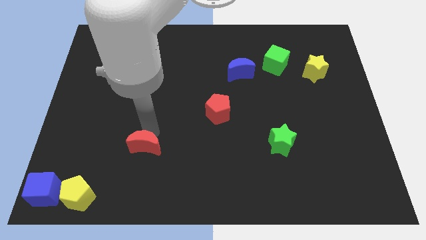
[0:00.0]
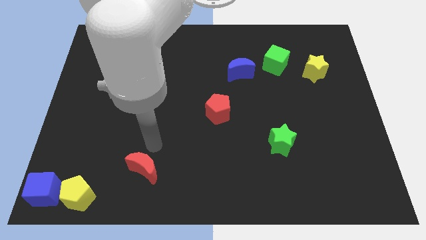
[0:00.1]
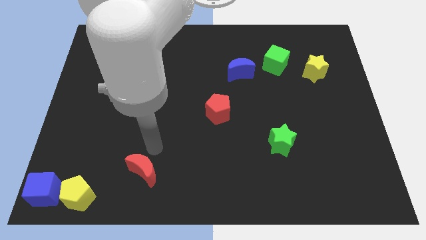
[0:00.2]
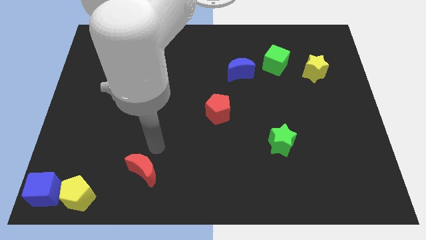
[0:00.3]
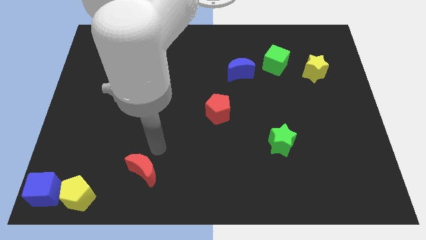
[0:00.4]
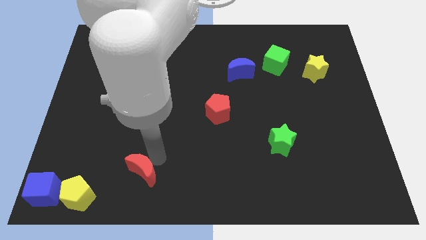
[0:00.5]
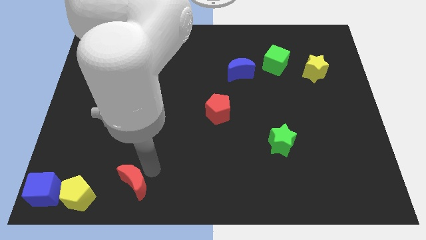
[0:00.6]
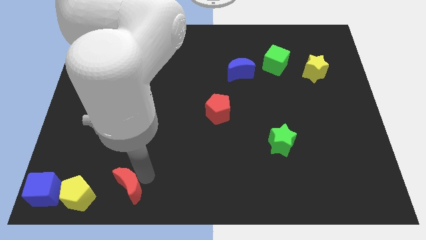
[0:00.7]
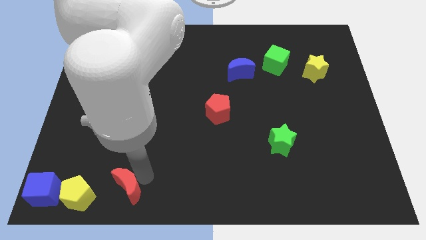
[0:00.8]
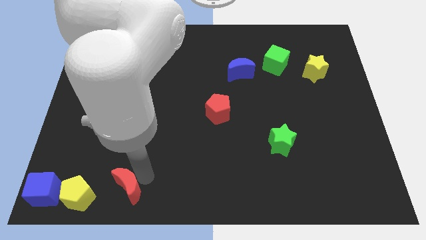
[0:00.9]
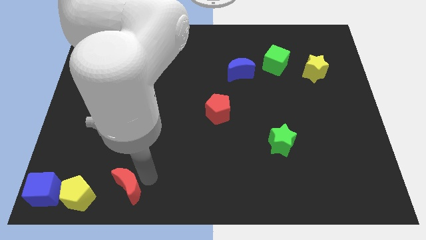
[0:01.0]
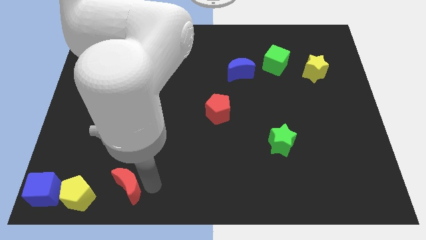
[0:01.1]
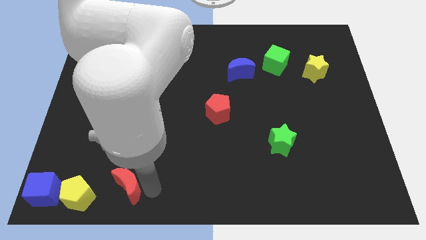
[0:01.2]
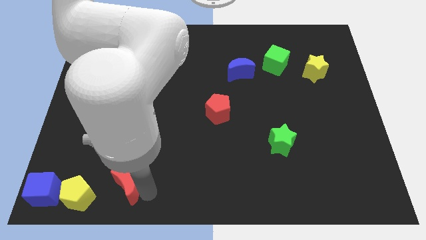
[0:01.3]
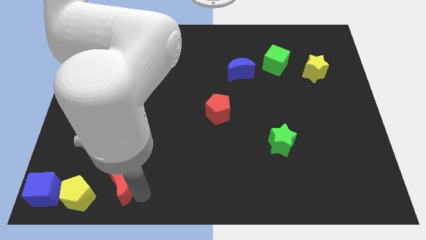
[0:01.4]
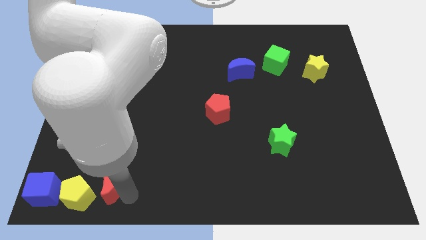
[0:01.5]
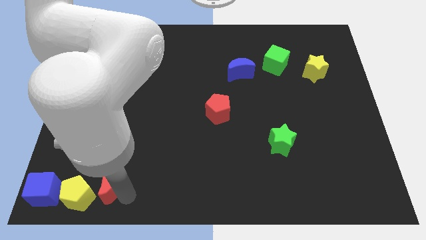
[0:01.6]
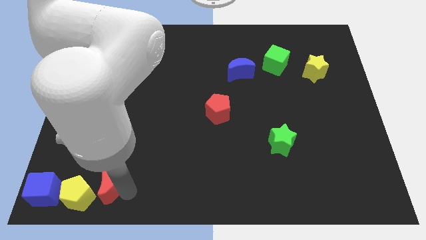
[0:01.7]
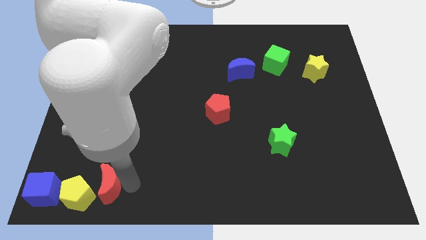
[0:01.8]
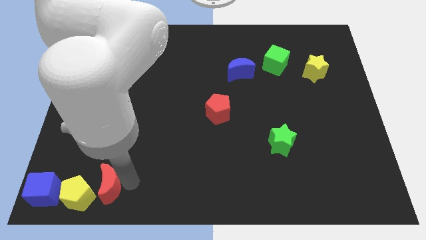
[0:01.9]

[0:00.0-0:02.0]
push the red crescent towards the bottom left

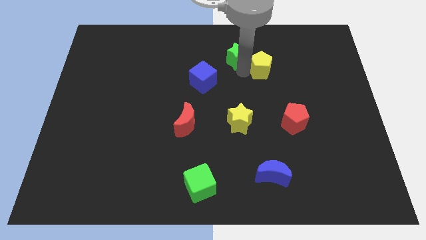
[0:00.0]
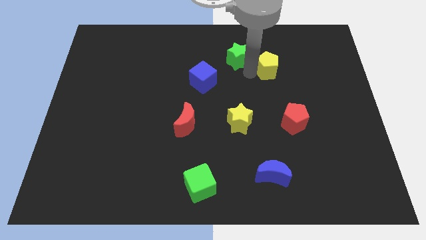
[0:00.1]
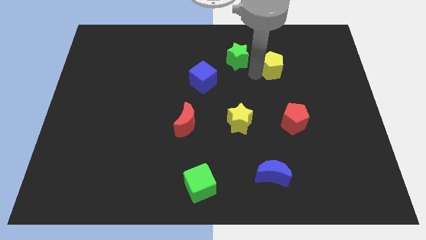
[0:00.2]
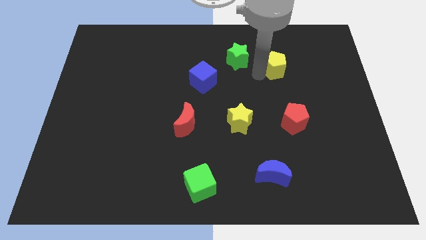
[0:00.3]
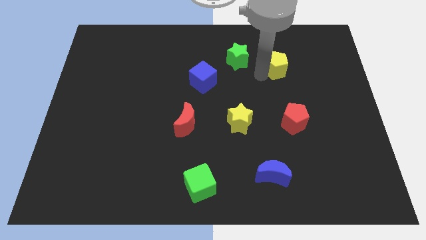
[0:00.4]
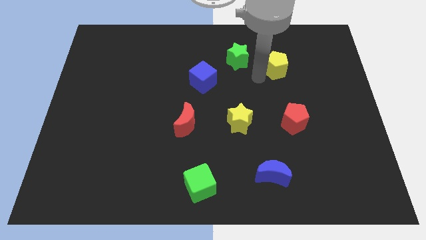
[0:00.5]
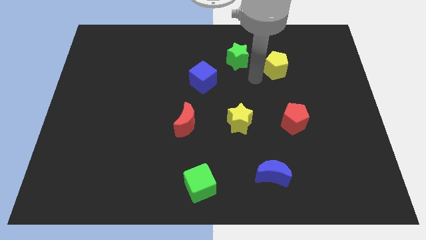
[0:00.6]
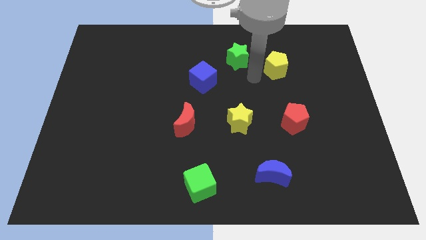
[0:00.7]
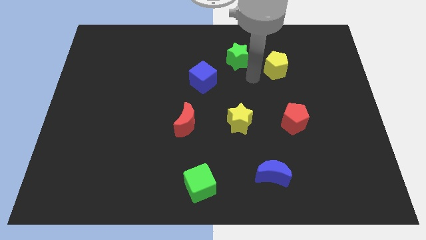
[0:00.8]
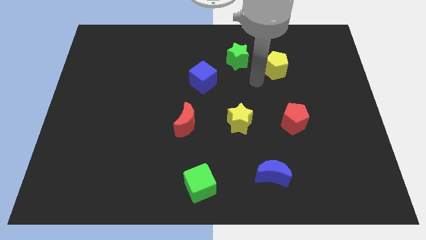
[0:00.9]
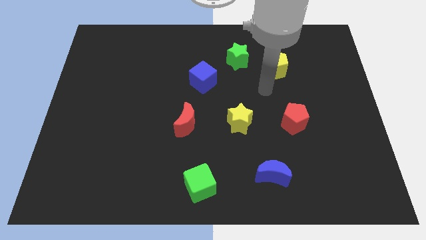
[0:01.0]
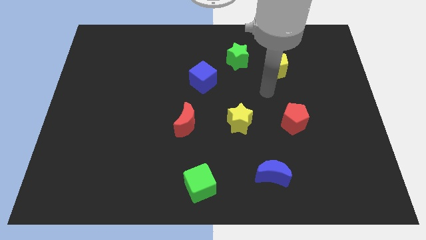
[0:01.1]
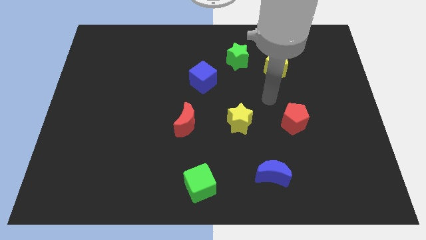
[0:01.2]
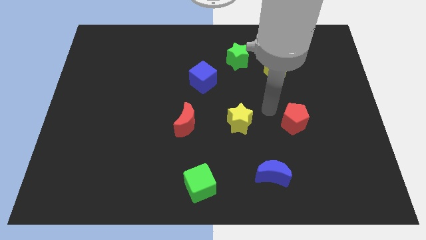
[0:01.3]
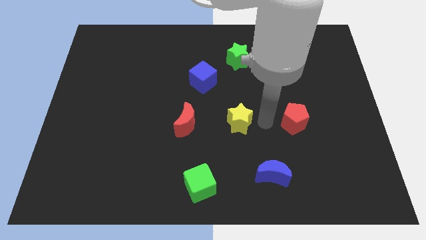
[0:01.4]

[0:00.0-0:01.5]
move the yellow pentagon slightly to the right

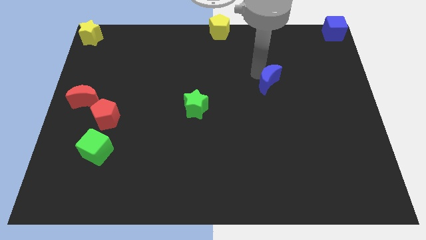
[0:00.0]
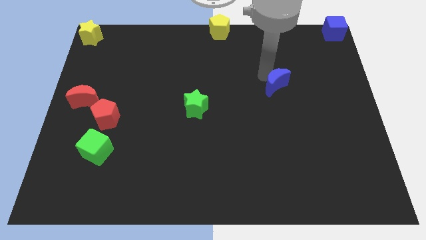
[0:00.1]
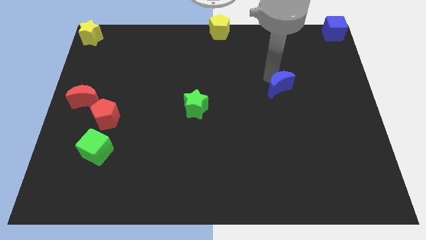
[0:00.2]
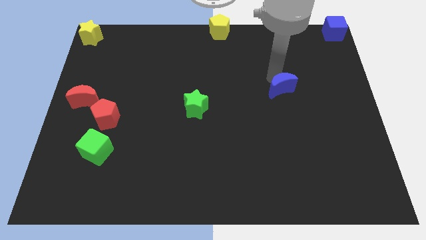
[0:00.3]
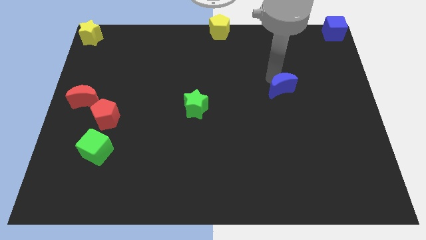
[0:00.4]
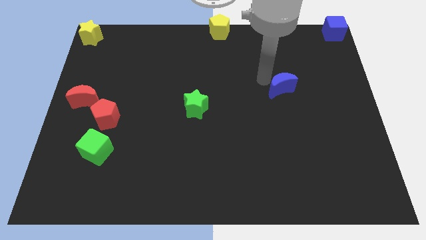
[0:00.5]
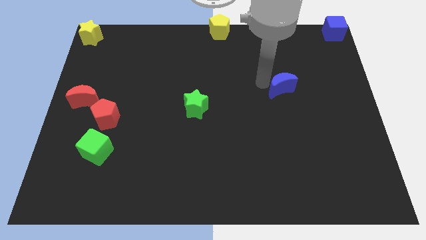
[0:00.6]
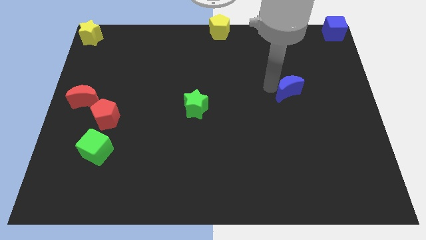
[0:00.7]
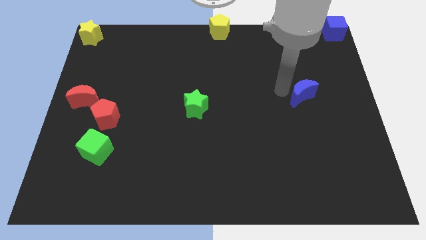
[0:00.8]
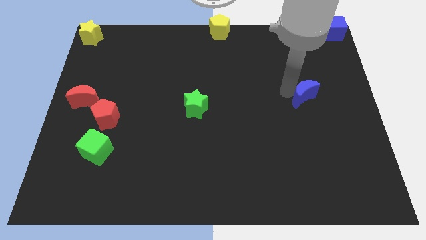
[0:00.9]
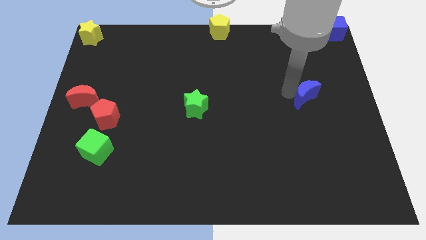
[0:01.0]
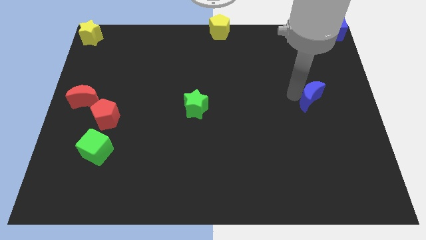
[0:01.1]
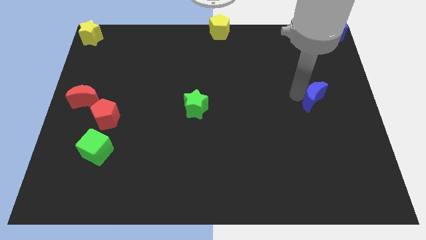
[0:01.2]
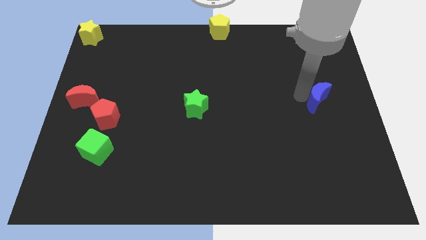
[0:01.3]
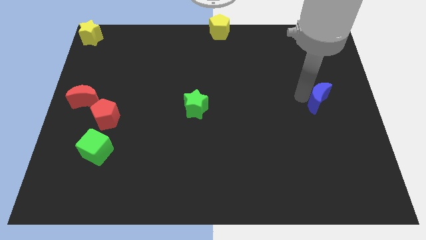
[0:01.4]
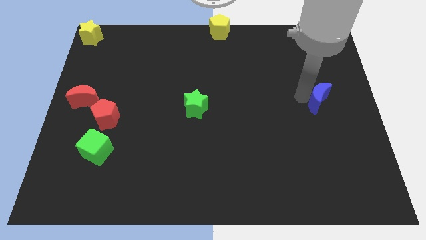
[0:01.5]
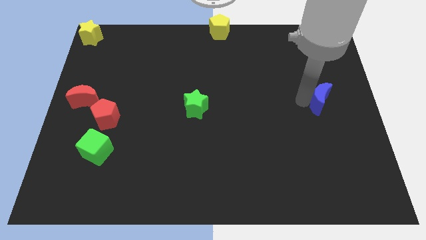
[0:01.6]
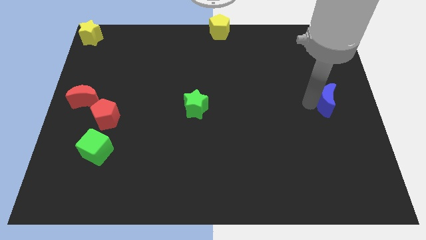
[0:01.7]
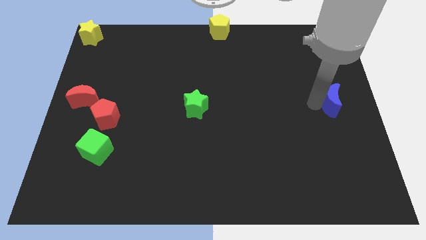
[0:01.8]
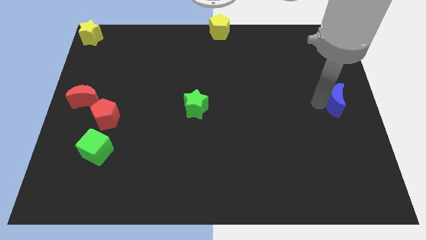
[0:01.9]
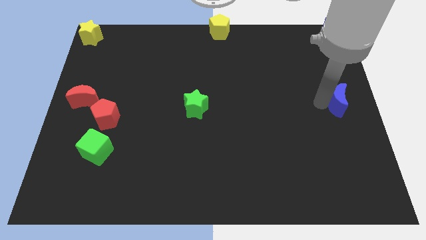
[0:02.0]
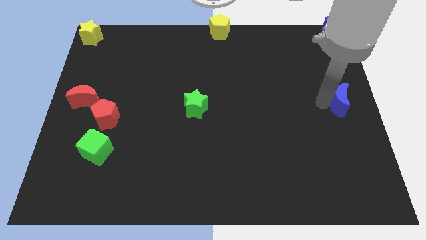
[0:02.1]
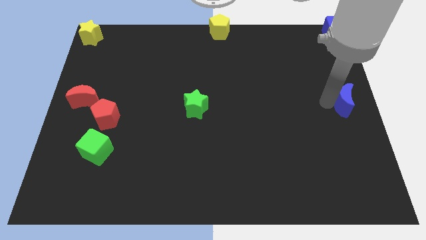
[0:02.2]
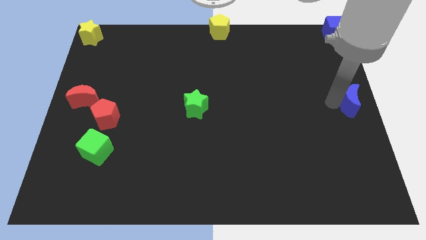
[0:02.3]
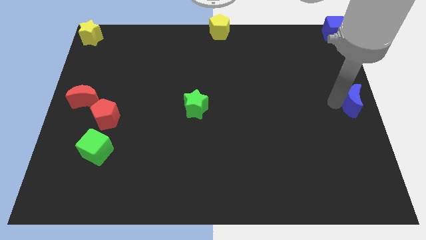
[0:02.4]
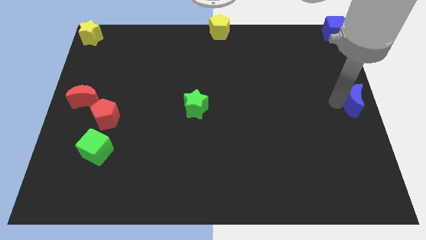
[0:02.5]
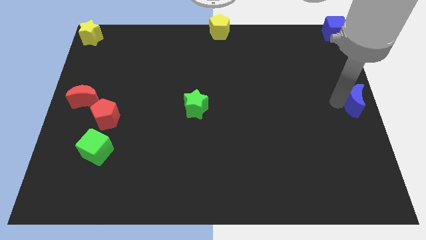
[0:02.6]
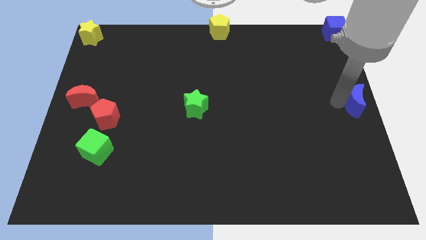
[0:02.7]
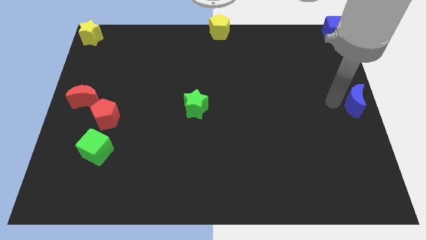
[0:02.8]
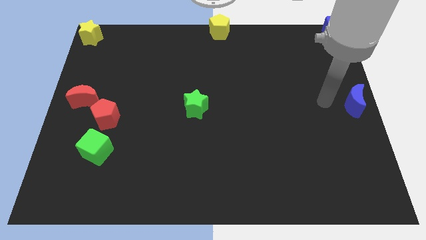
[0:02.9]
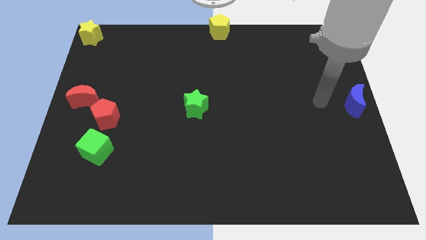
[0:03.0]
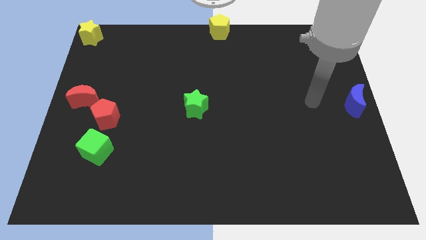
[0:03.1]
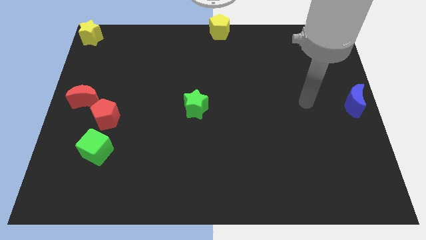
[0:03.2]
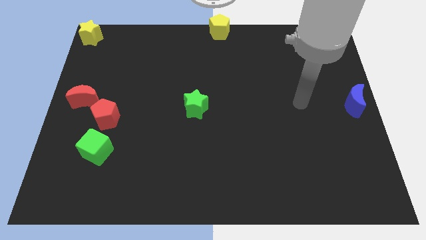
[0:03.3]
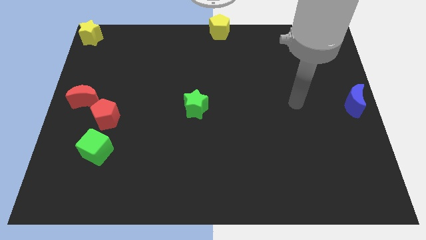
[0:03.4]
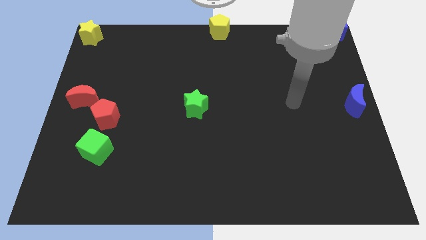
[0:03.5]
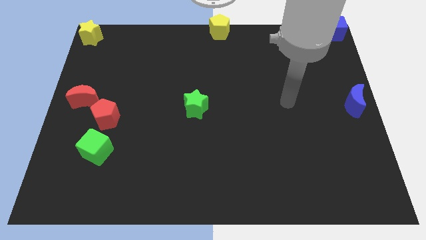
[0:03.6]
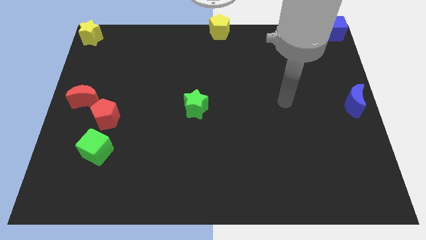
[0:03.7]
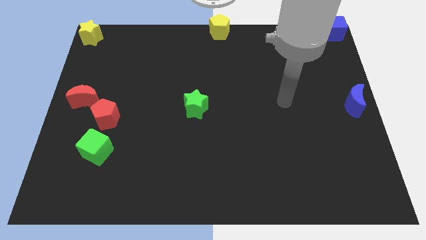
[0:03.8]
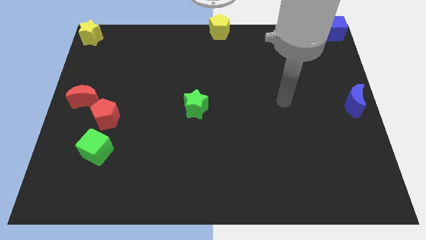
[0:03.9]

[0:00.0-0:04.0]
slide the blue moon vertically below the blue cube

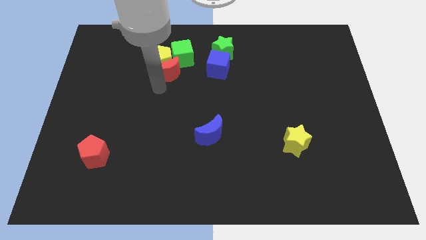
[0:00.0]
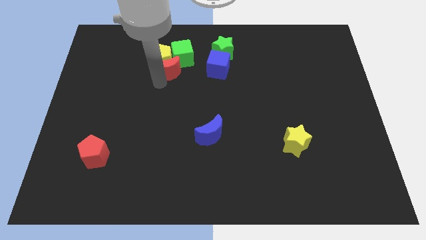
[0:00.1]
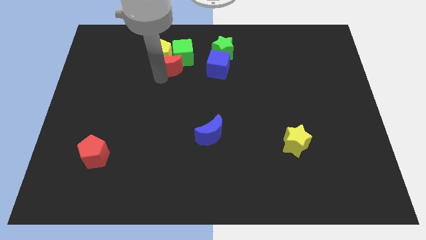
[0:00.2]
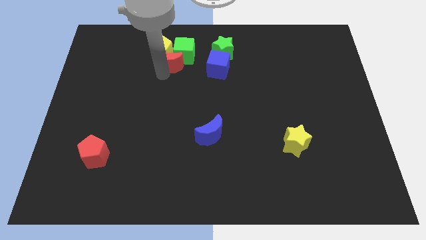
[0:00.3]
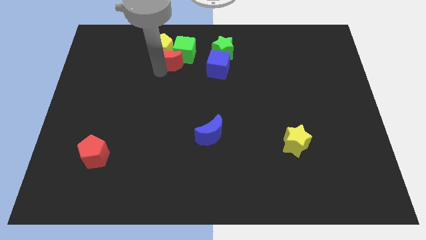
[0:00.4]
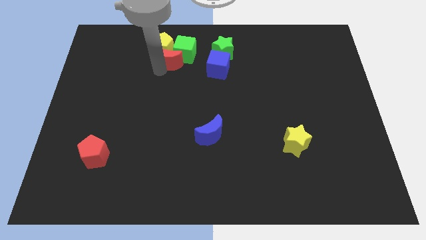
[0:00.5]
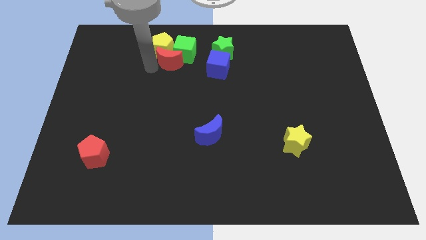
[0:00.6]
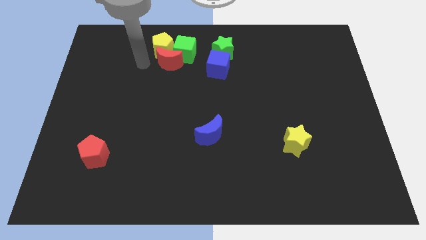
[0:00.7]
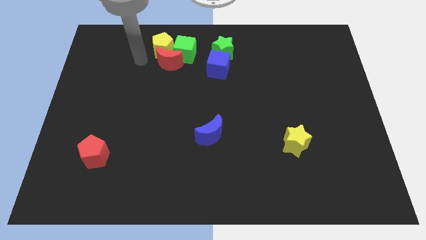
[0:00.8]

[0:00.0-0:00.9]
push the red crescent into the green cube

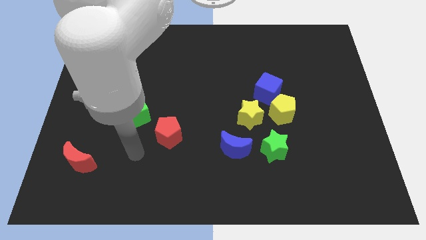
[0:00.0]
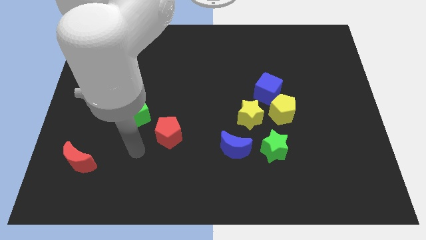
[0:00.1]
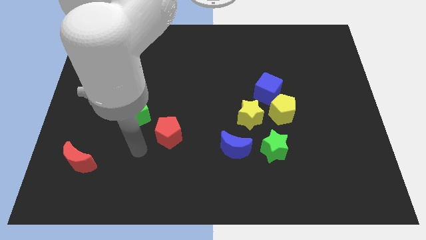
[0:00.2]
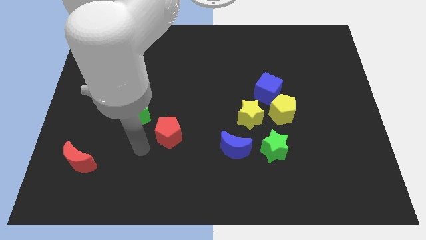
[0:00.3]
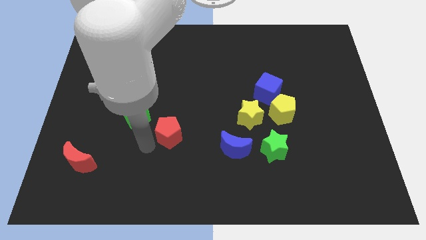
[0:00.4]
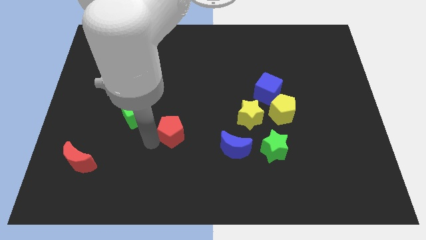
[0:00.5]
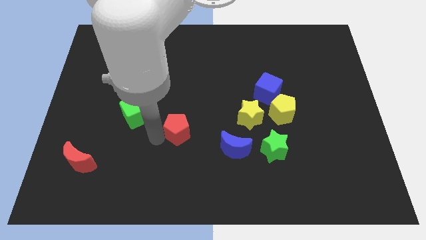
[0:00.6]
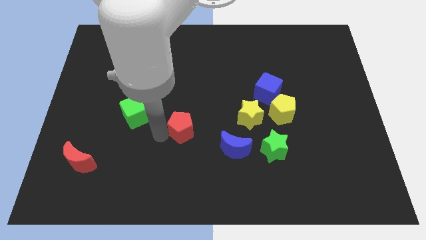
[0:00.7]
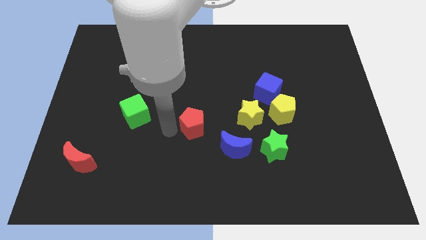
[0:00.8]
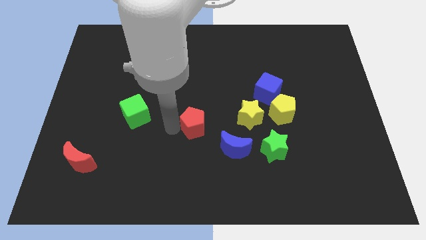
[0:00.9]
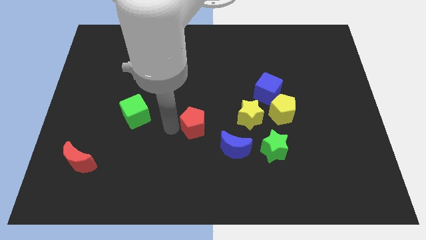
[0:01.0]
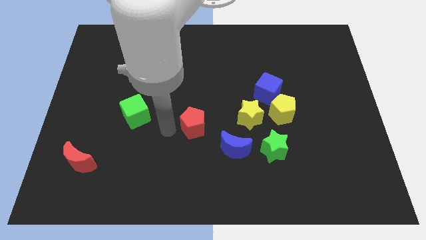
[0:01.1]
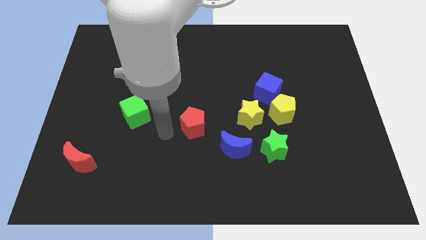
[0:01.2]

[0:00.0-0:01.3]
push the red pentagon to the right of the board
